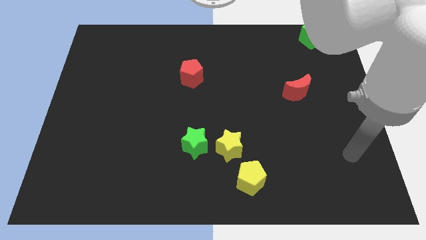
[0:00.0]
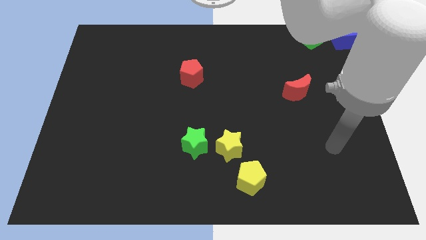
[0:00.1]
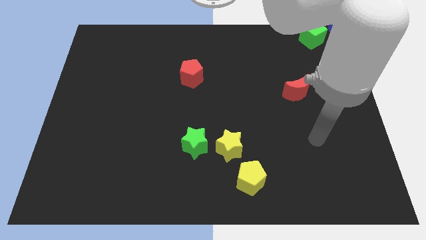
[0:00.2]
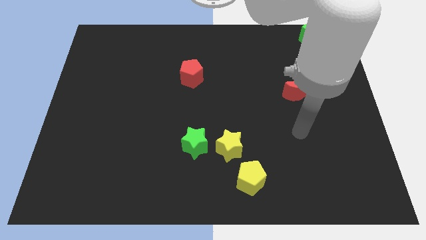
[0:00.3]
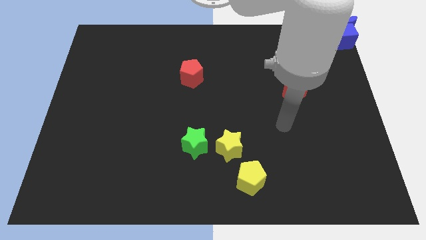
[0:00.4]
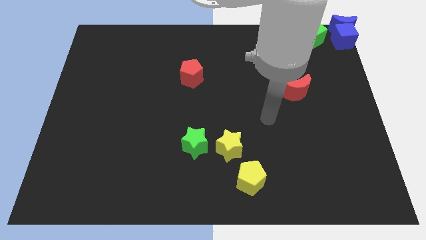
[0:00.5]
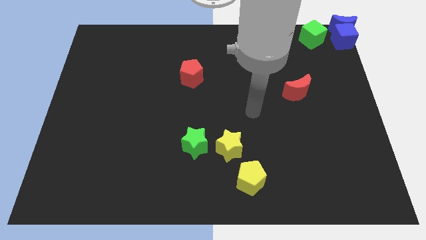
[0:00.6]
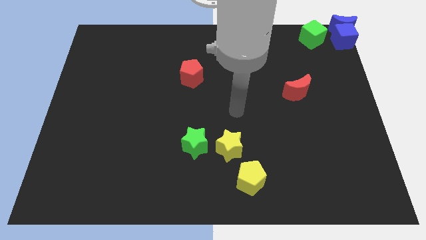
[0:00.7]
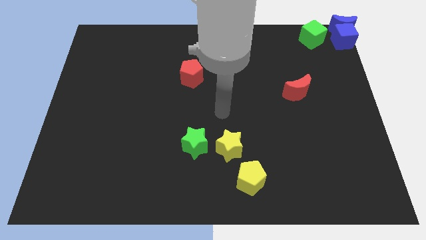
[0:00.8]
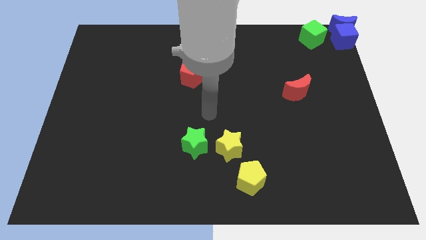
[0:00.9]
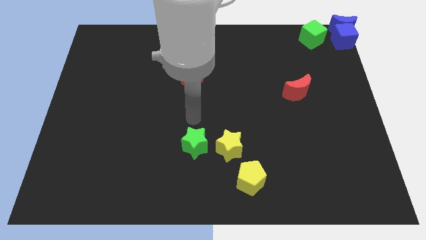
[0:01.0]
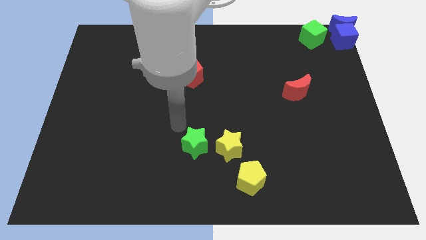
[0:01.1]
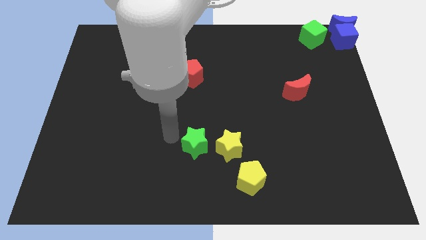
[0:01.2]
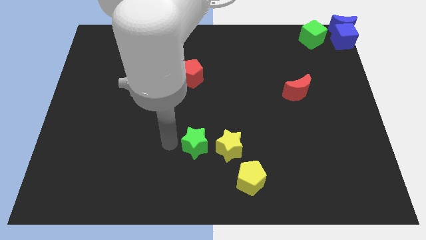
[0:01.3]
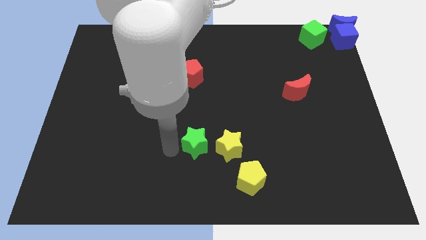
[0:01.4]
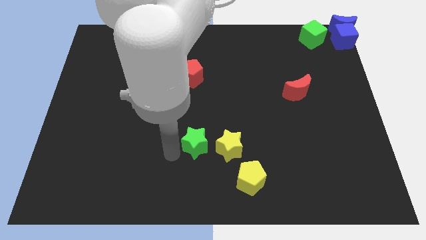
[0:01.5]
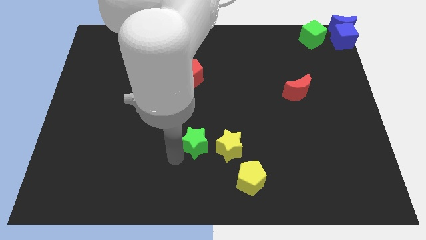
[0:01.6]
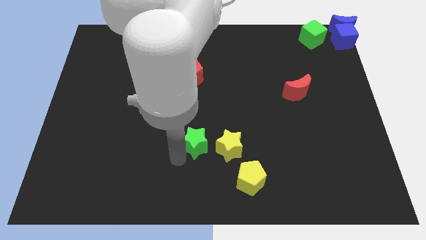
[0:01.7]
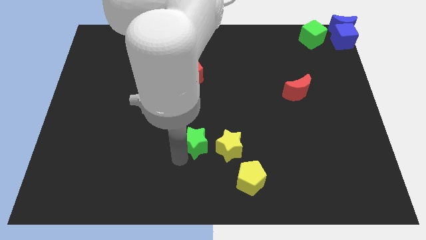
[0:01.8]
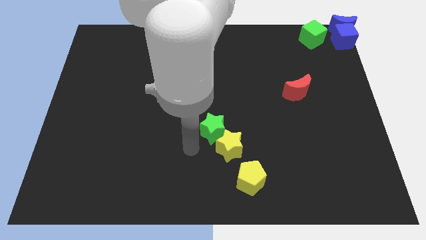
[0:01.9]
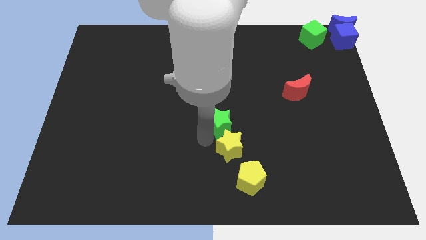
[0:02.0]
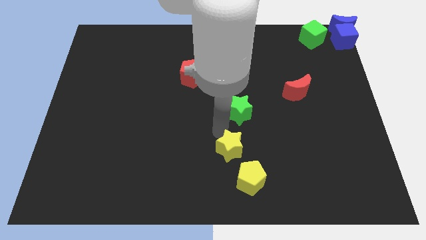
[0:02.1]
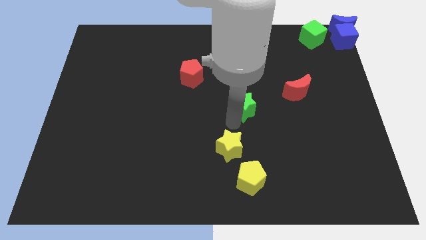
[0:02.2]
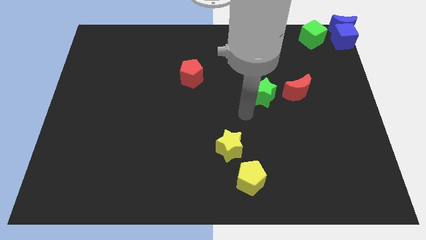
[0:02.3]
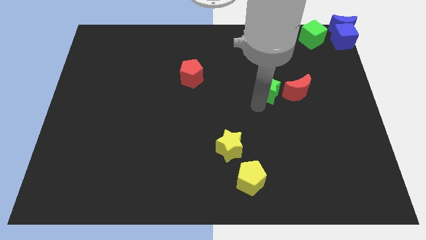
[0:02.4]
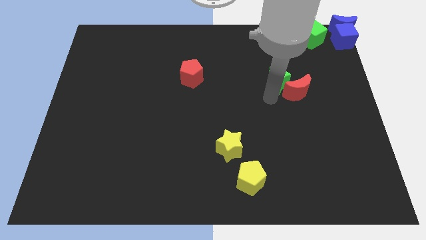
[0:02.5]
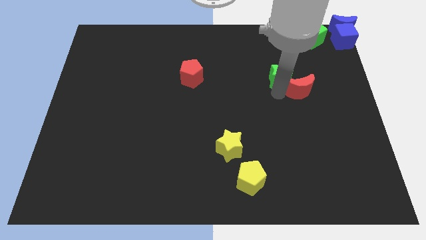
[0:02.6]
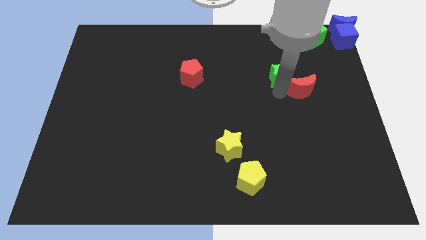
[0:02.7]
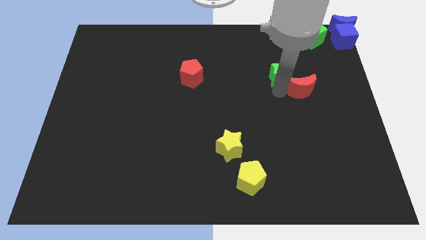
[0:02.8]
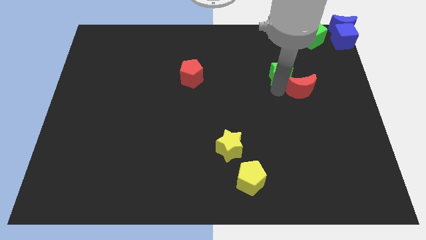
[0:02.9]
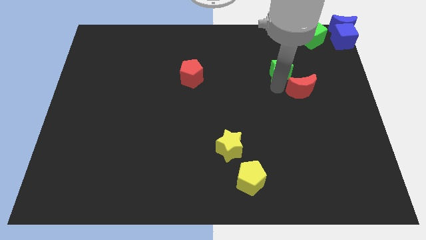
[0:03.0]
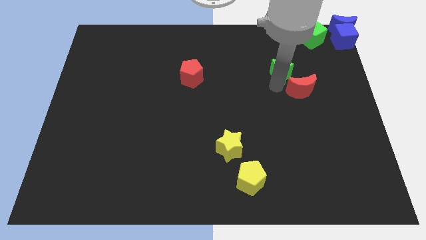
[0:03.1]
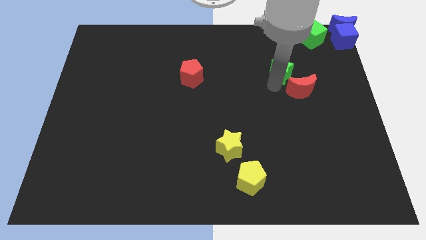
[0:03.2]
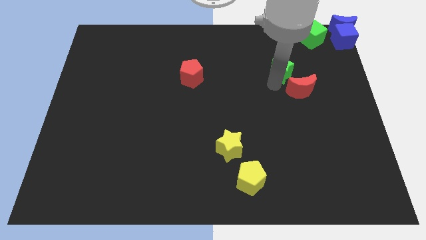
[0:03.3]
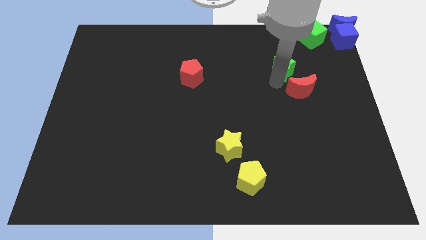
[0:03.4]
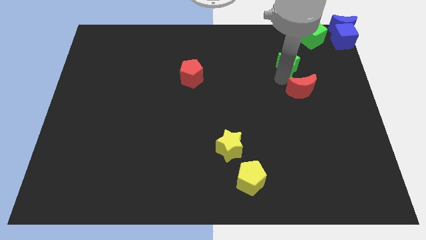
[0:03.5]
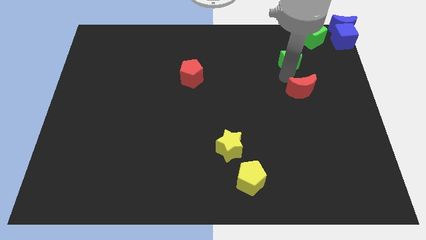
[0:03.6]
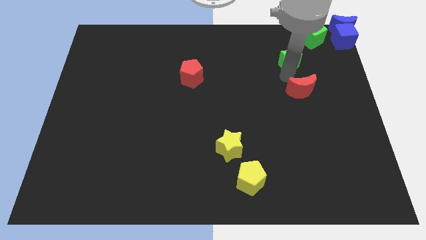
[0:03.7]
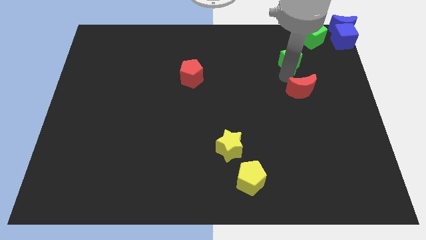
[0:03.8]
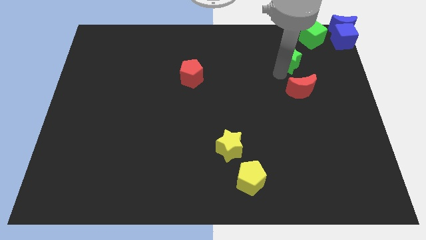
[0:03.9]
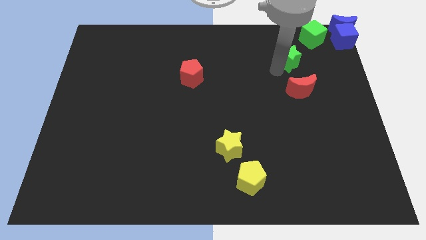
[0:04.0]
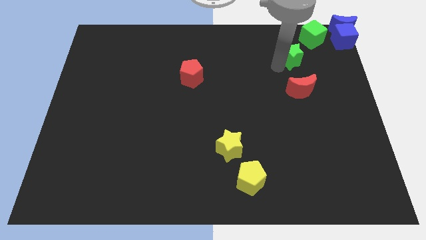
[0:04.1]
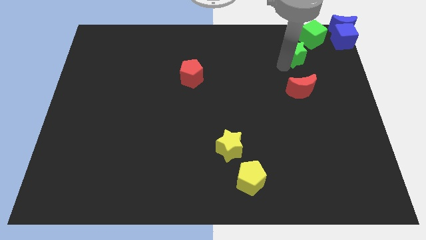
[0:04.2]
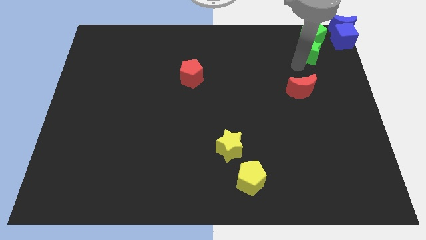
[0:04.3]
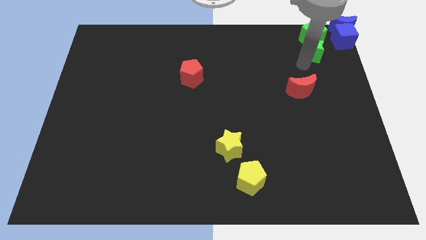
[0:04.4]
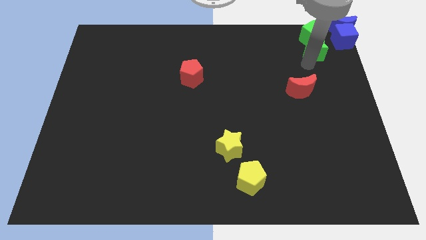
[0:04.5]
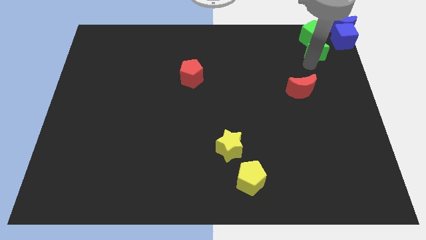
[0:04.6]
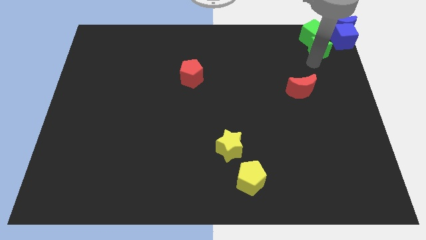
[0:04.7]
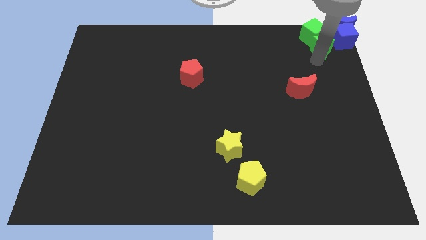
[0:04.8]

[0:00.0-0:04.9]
push the green star into the green cube

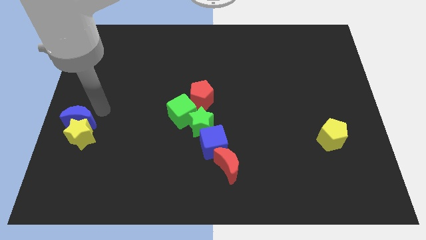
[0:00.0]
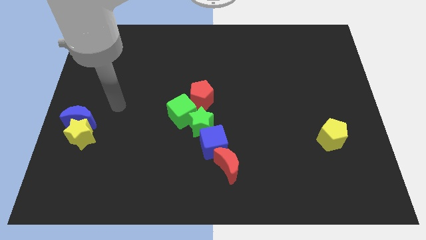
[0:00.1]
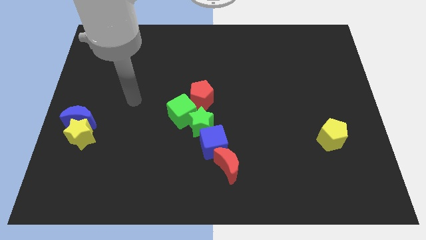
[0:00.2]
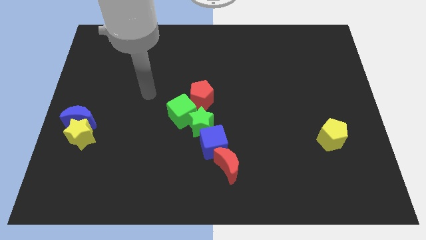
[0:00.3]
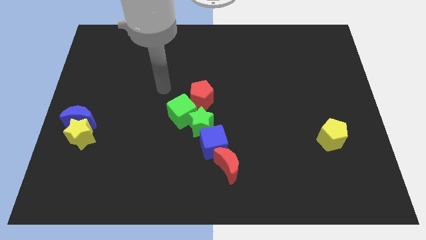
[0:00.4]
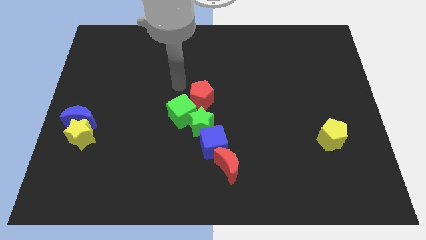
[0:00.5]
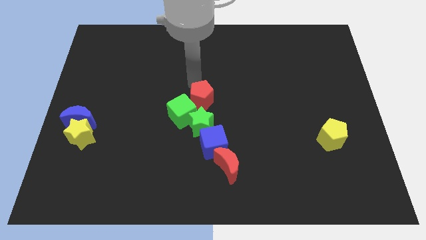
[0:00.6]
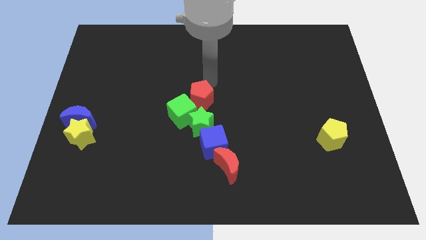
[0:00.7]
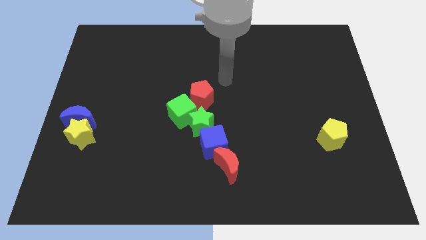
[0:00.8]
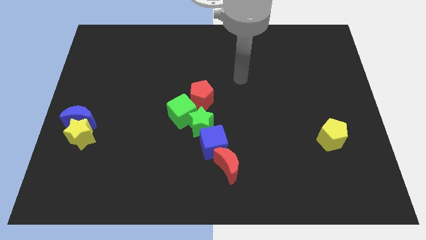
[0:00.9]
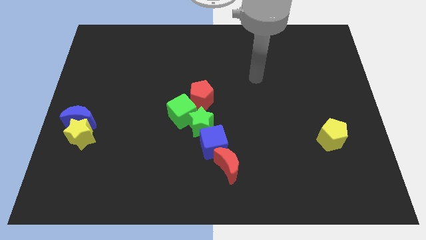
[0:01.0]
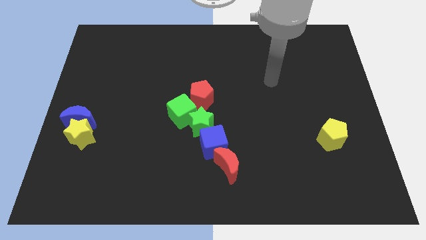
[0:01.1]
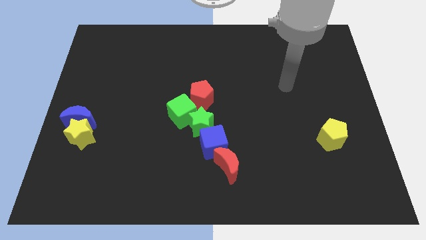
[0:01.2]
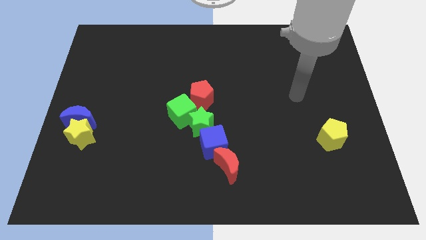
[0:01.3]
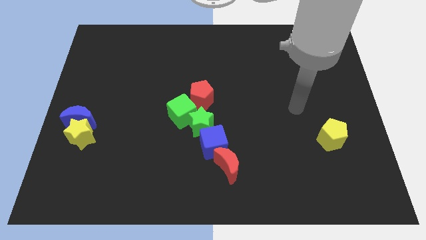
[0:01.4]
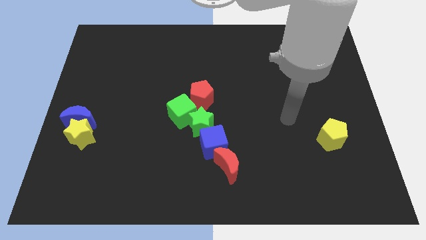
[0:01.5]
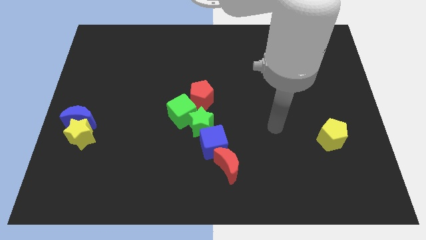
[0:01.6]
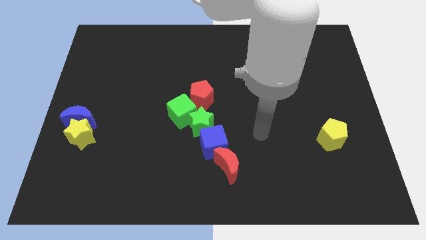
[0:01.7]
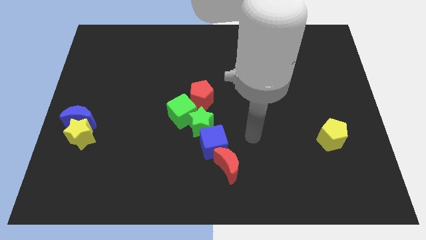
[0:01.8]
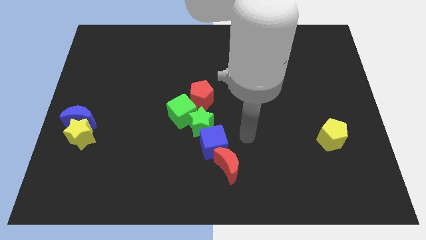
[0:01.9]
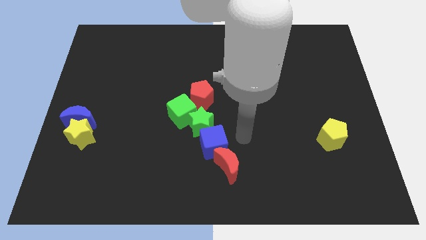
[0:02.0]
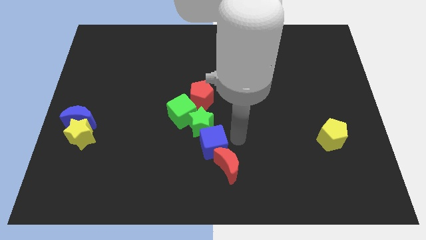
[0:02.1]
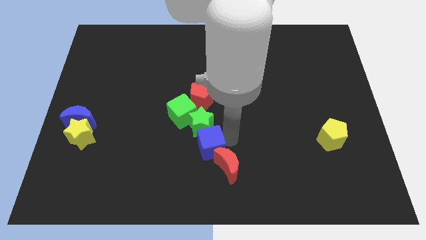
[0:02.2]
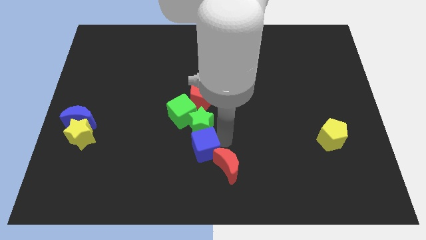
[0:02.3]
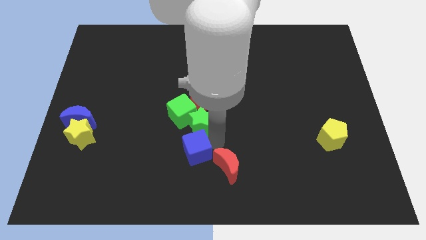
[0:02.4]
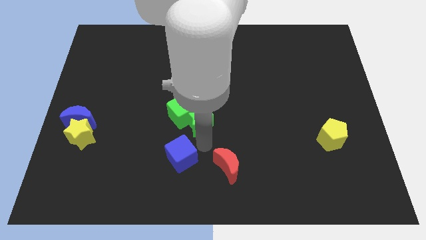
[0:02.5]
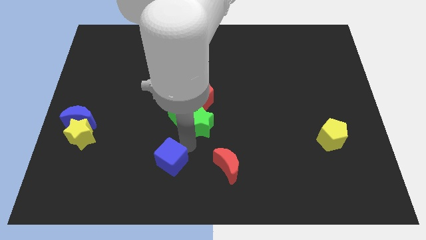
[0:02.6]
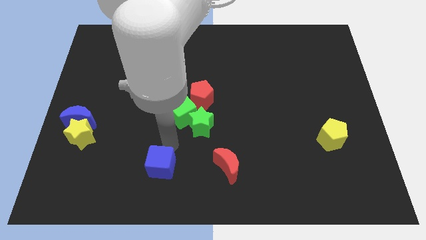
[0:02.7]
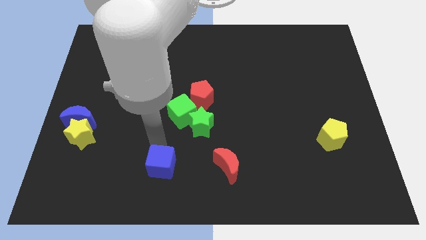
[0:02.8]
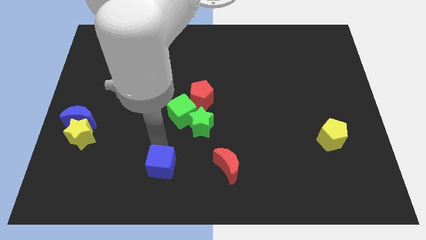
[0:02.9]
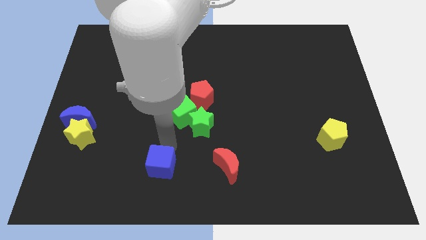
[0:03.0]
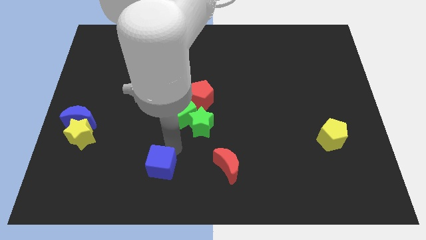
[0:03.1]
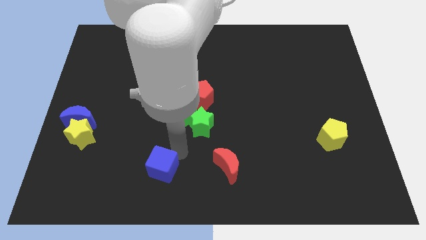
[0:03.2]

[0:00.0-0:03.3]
place the blue cube to the left side of the red crescent

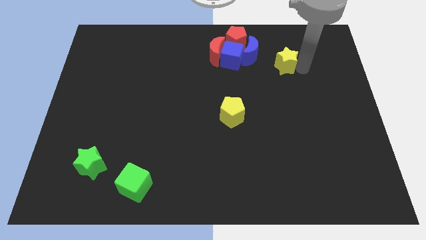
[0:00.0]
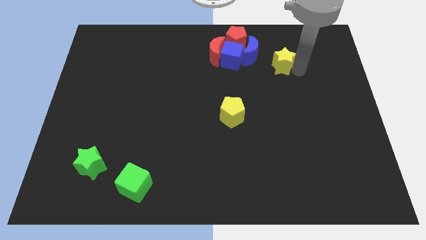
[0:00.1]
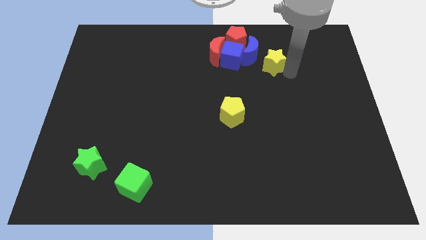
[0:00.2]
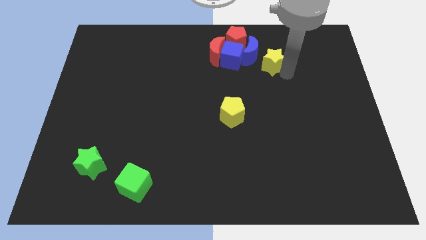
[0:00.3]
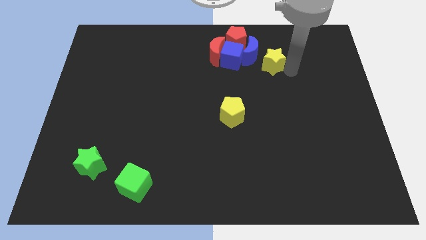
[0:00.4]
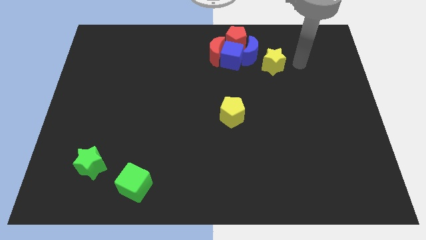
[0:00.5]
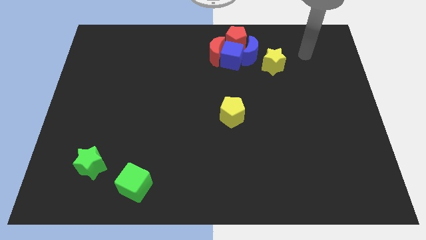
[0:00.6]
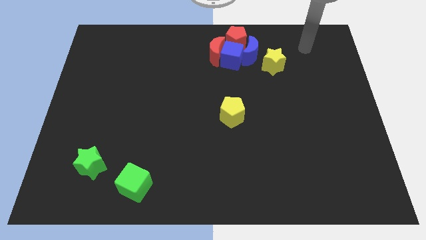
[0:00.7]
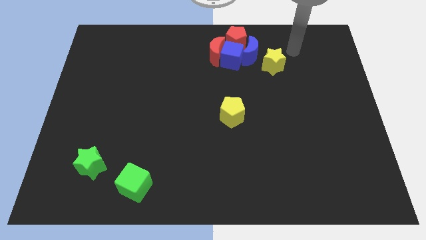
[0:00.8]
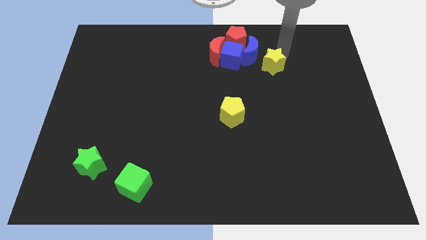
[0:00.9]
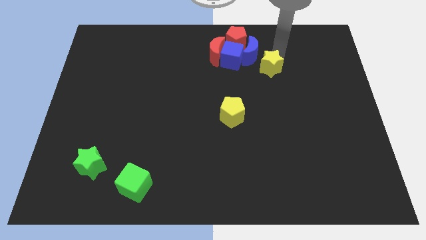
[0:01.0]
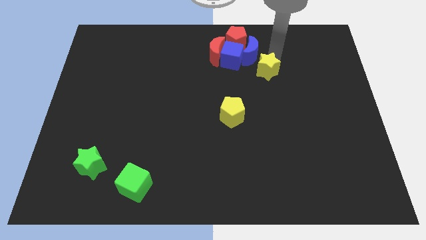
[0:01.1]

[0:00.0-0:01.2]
push yellow star towards the group of blocks
